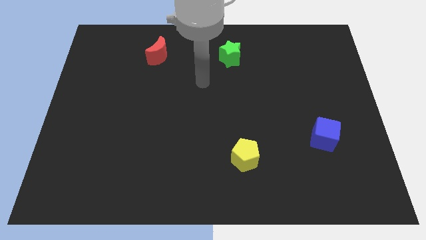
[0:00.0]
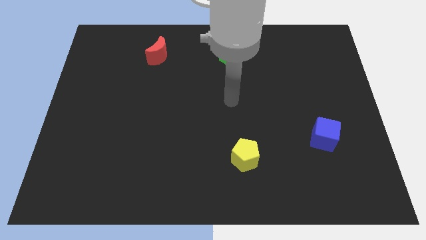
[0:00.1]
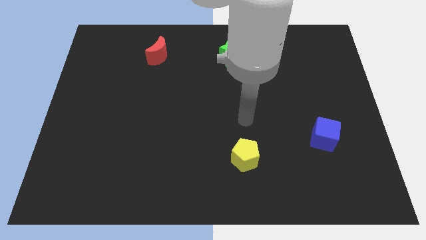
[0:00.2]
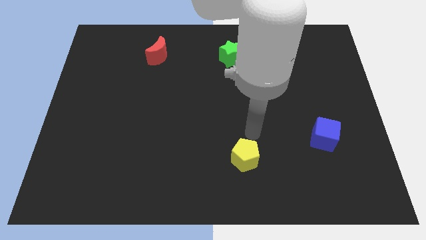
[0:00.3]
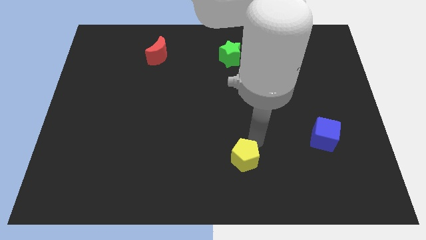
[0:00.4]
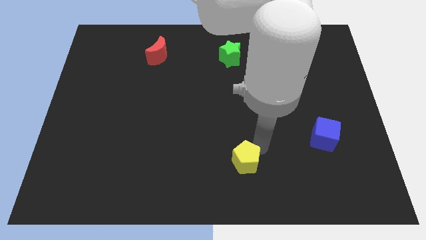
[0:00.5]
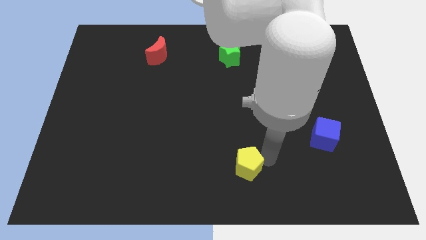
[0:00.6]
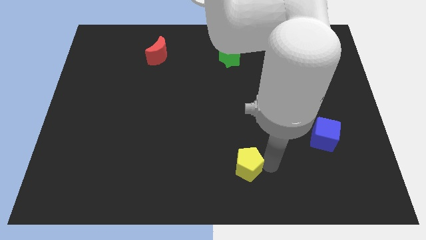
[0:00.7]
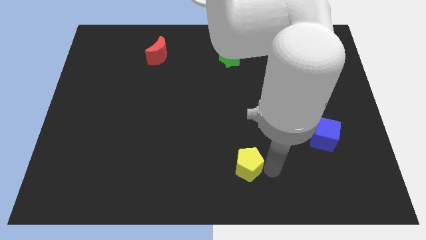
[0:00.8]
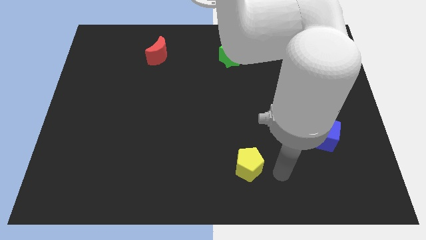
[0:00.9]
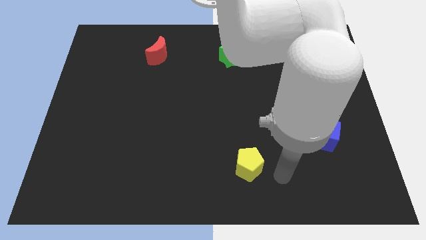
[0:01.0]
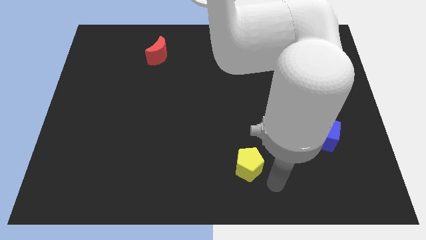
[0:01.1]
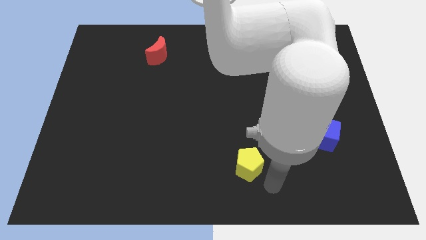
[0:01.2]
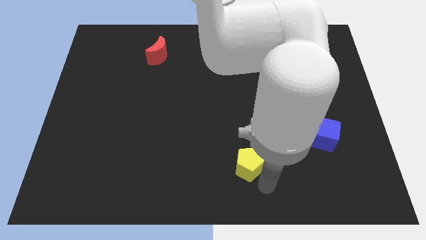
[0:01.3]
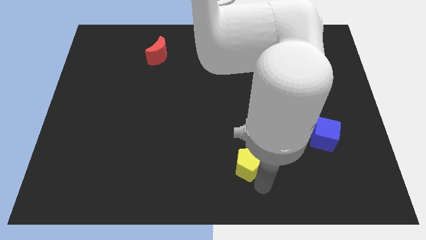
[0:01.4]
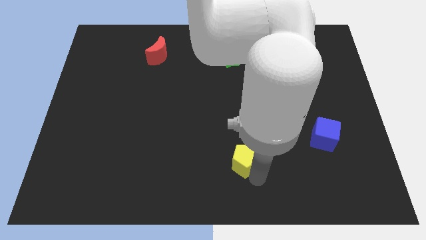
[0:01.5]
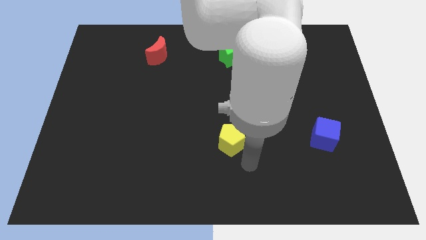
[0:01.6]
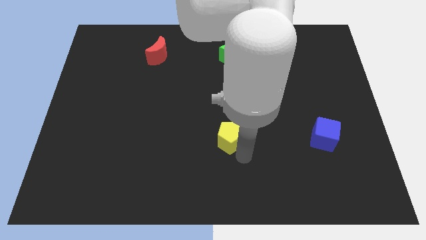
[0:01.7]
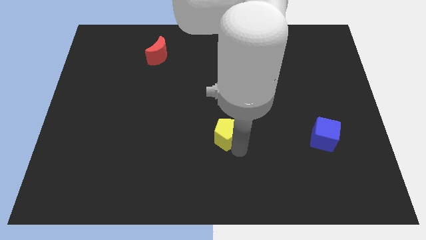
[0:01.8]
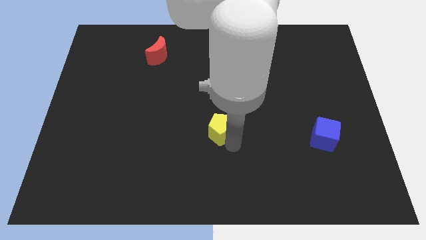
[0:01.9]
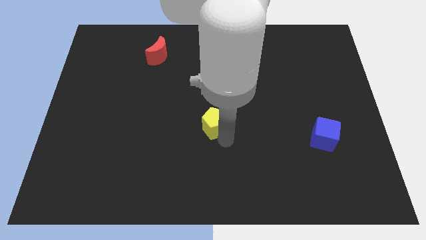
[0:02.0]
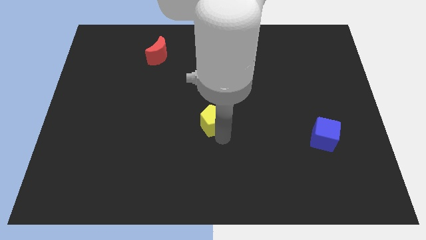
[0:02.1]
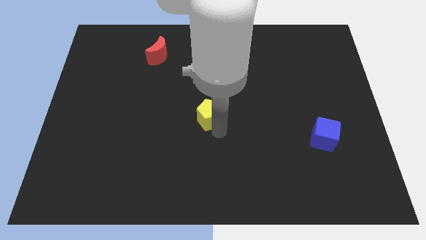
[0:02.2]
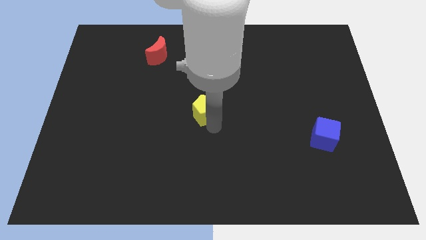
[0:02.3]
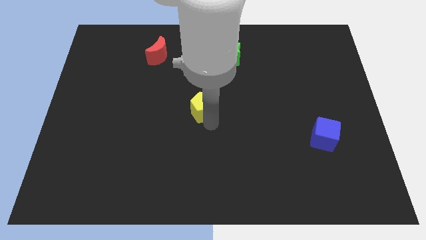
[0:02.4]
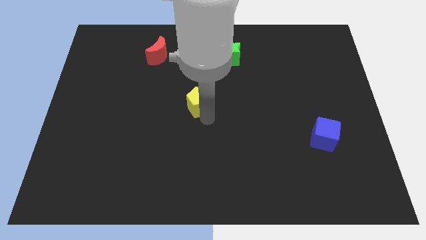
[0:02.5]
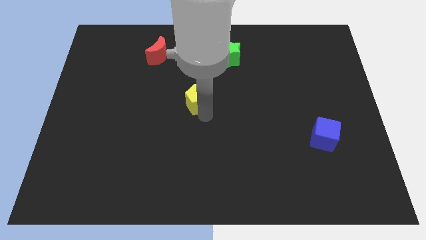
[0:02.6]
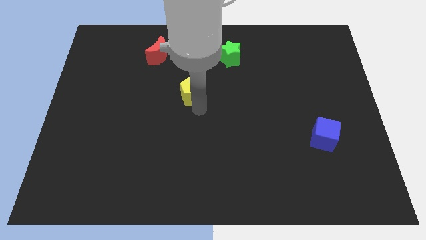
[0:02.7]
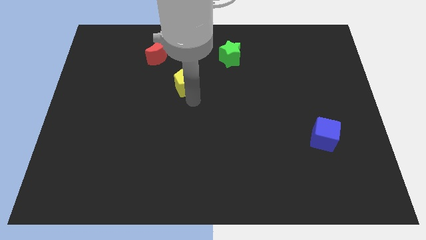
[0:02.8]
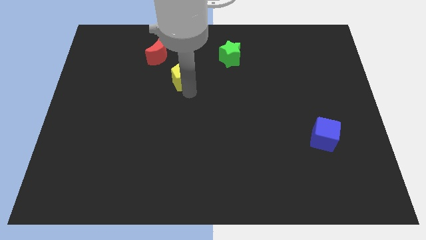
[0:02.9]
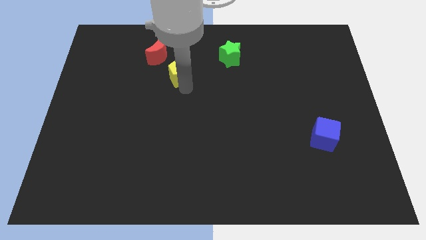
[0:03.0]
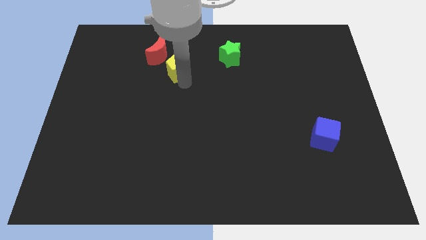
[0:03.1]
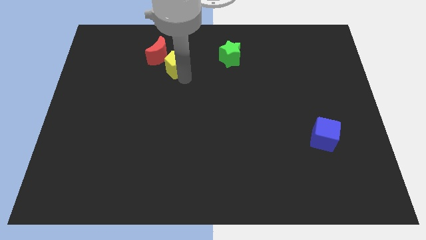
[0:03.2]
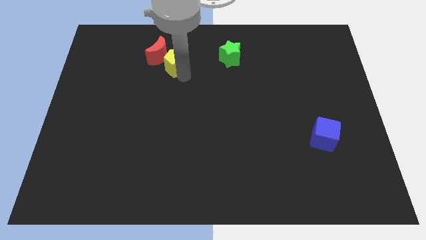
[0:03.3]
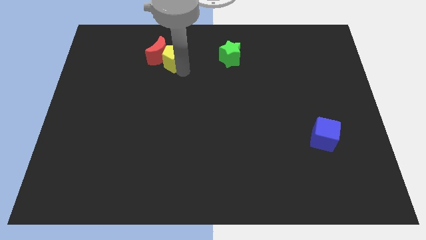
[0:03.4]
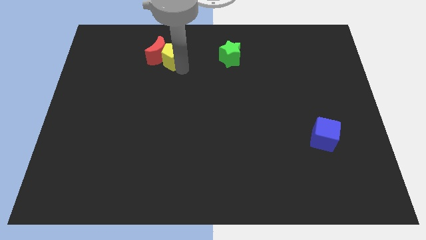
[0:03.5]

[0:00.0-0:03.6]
move the yellow pentagon close to the moon

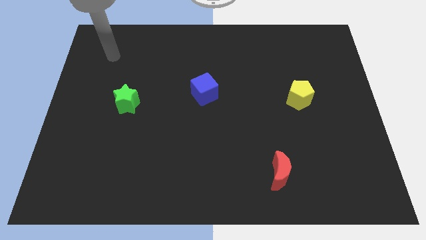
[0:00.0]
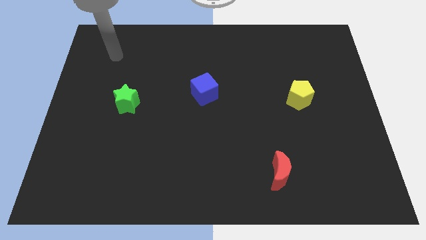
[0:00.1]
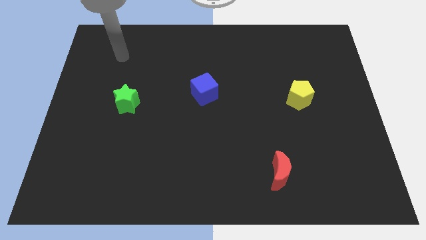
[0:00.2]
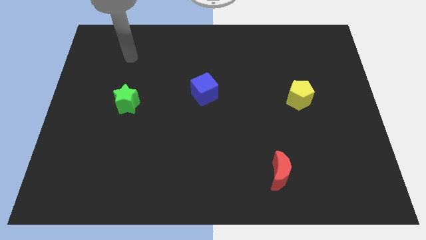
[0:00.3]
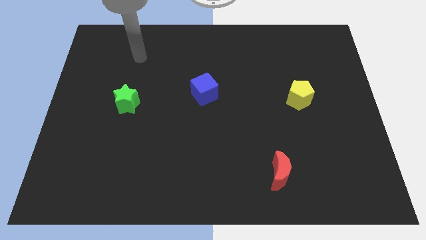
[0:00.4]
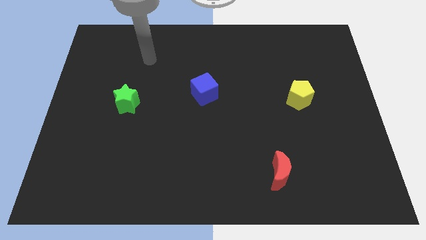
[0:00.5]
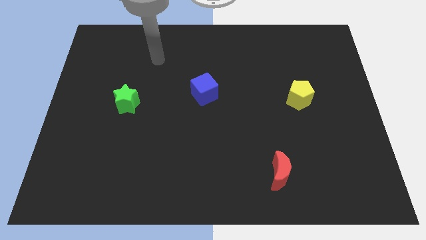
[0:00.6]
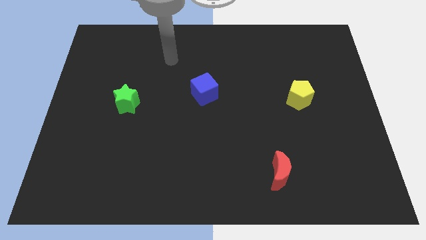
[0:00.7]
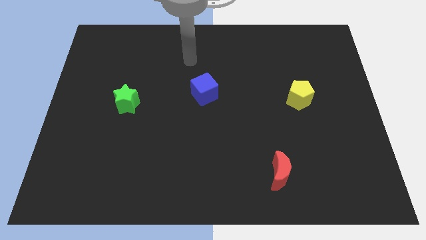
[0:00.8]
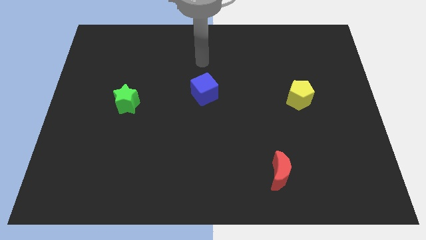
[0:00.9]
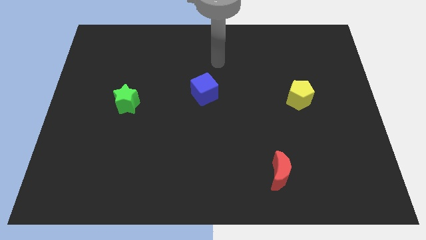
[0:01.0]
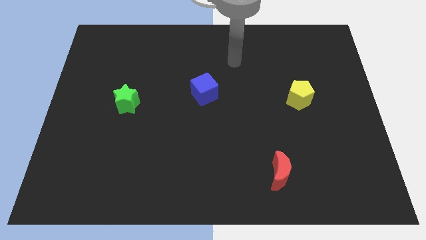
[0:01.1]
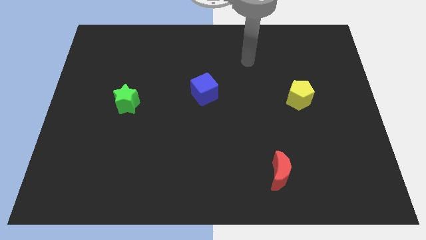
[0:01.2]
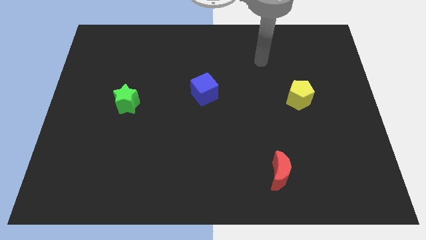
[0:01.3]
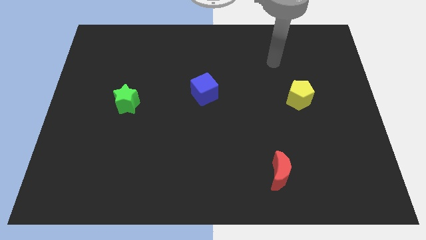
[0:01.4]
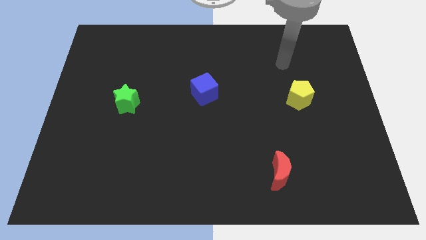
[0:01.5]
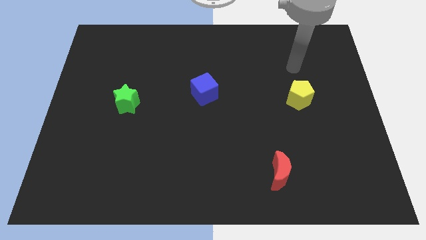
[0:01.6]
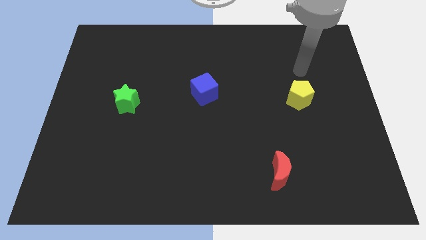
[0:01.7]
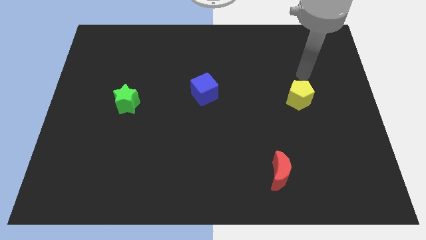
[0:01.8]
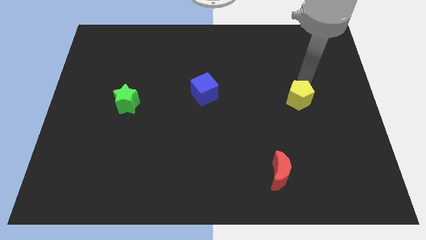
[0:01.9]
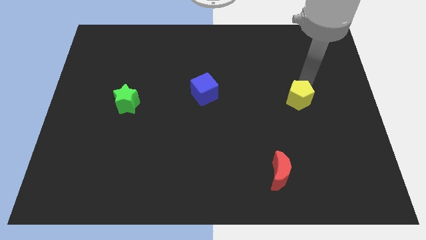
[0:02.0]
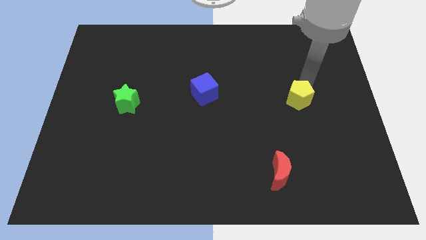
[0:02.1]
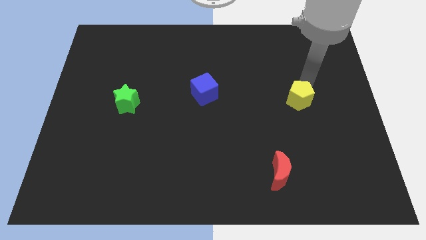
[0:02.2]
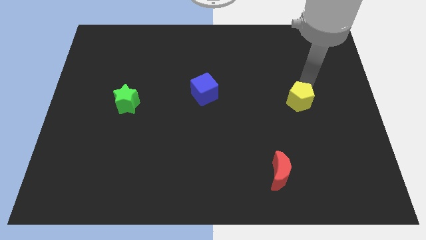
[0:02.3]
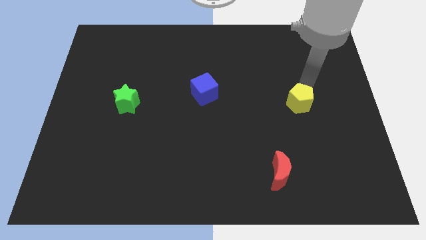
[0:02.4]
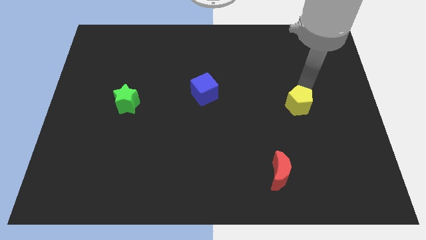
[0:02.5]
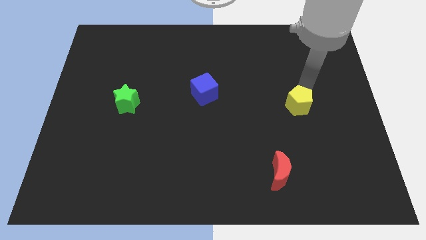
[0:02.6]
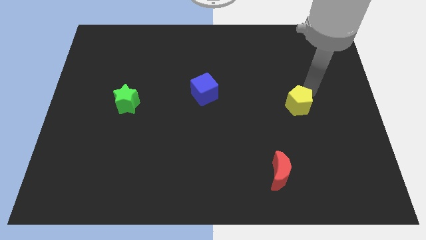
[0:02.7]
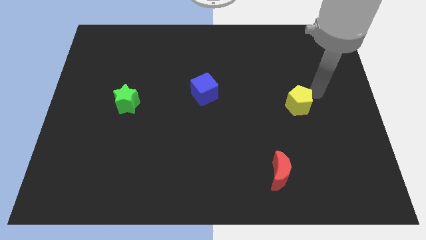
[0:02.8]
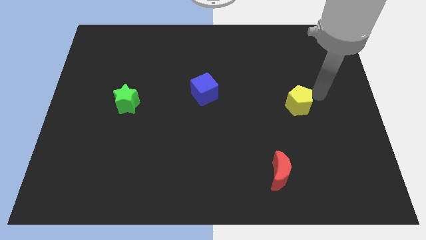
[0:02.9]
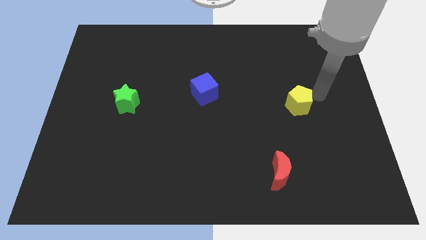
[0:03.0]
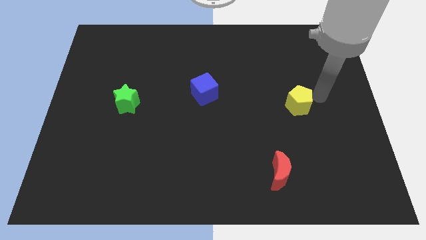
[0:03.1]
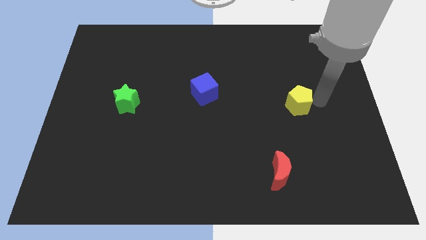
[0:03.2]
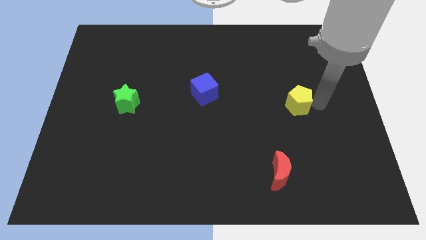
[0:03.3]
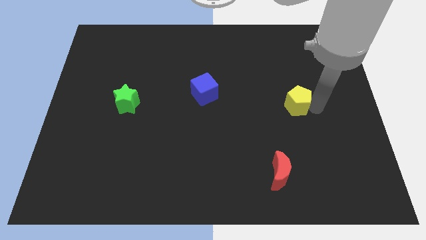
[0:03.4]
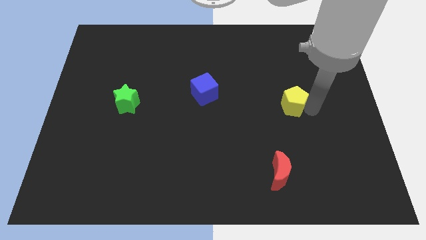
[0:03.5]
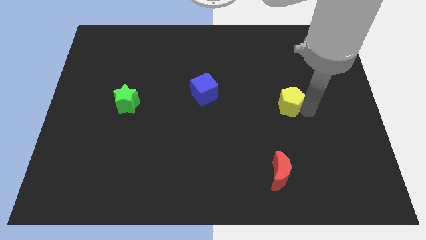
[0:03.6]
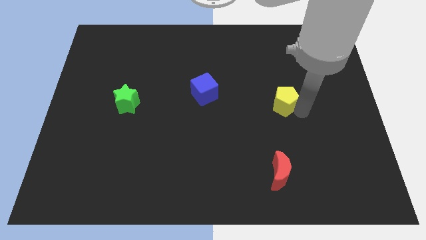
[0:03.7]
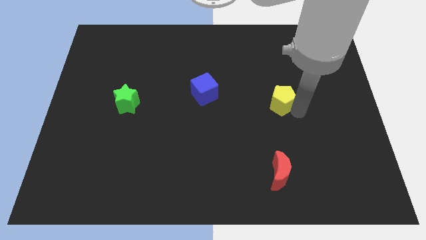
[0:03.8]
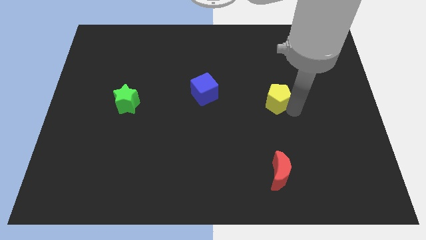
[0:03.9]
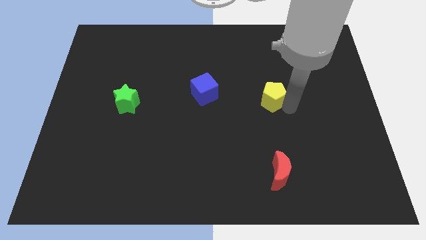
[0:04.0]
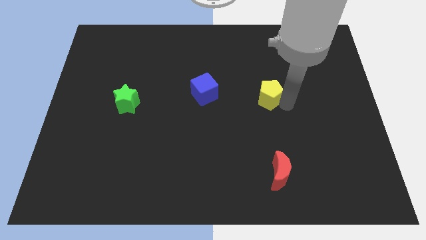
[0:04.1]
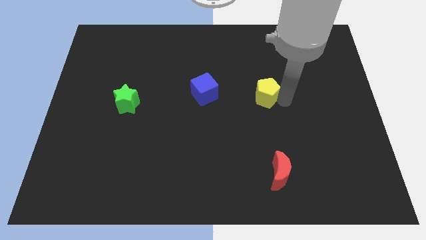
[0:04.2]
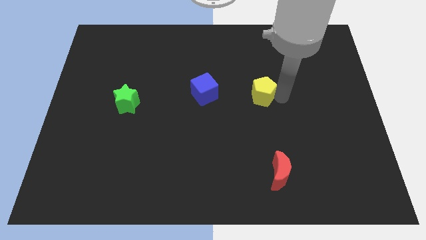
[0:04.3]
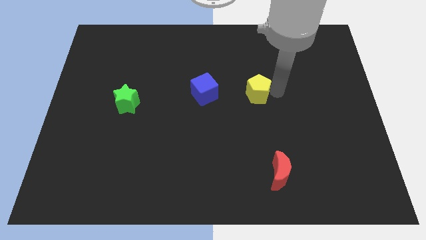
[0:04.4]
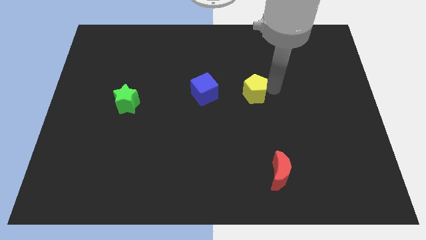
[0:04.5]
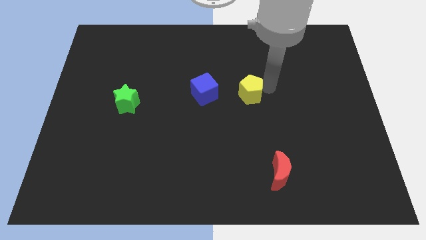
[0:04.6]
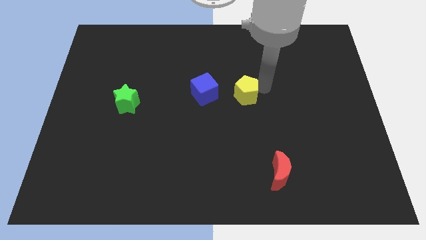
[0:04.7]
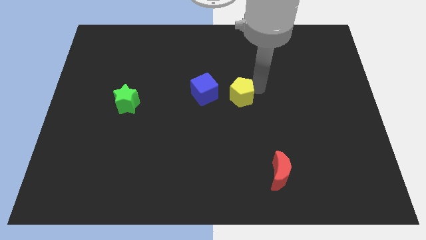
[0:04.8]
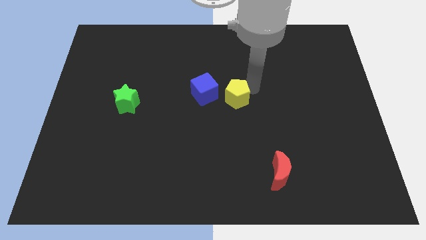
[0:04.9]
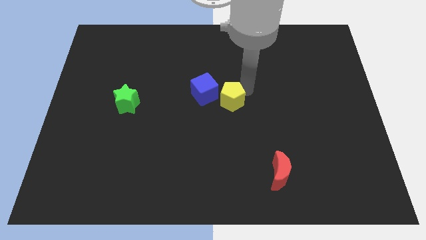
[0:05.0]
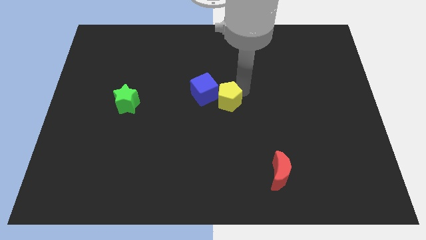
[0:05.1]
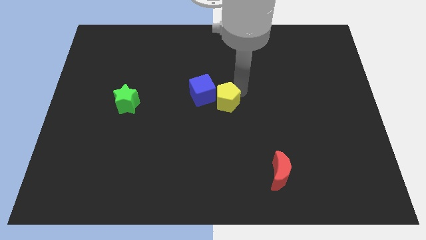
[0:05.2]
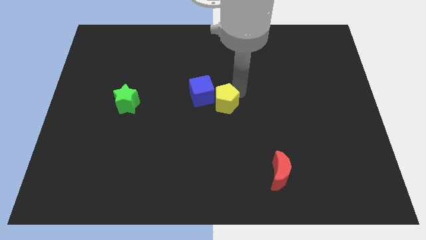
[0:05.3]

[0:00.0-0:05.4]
push the pentagon next to the blue cube
